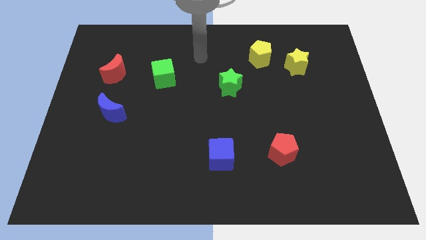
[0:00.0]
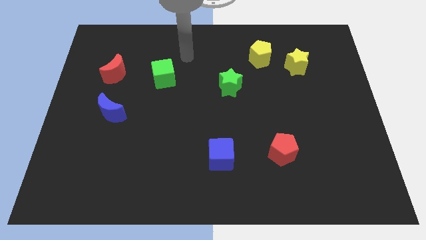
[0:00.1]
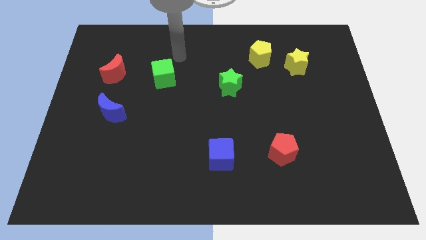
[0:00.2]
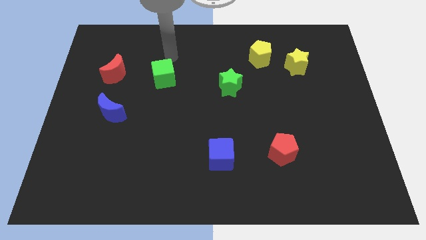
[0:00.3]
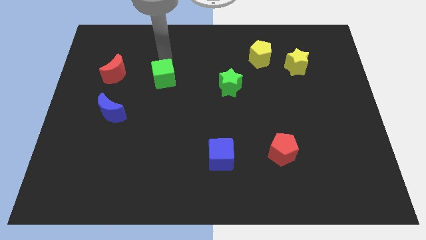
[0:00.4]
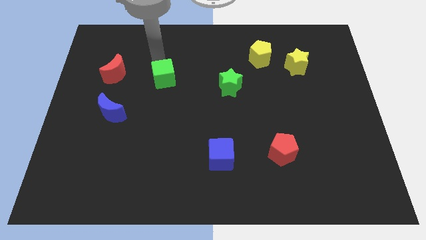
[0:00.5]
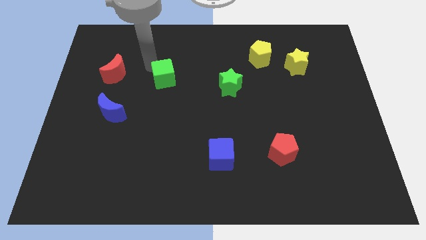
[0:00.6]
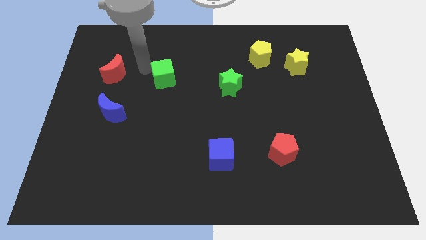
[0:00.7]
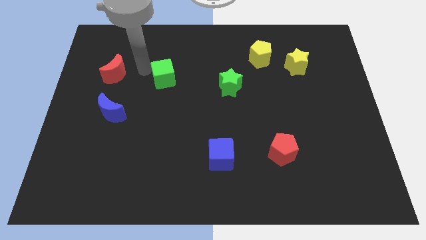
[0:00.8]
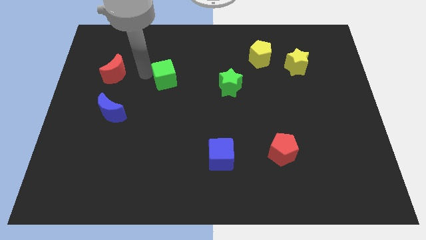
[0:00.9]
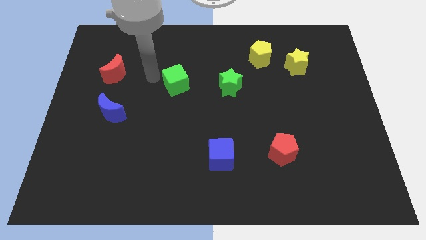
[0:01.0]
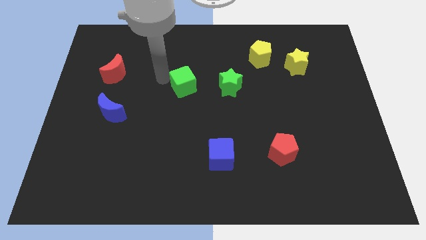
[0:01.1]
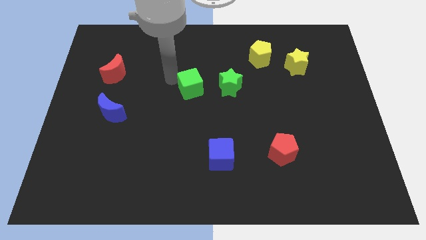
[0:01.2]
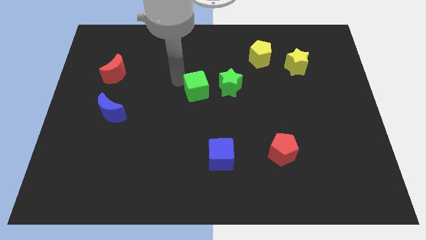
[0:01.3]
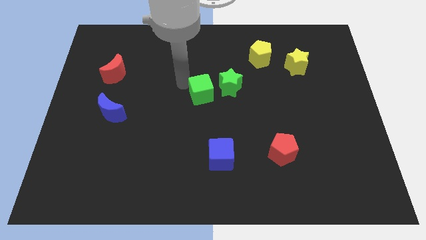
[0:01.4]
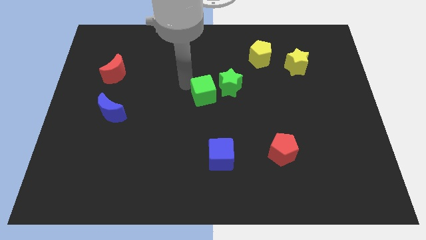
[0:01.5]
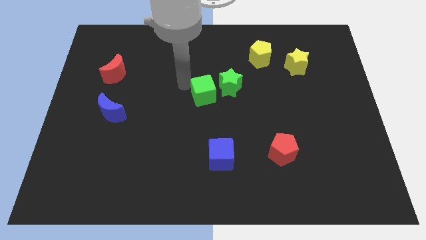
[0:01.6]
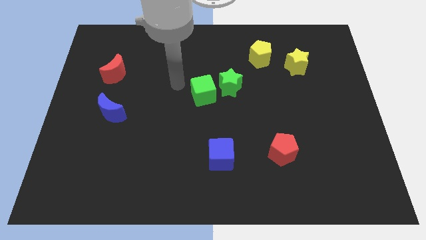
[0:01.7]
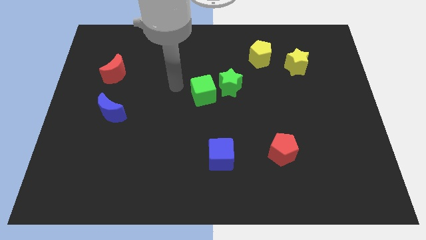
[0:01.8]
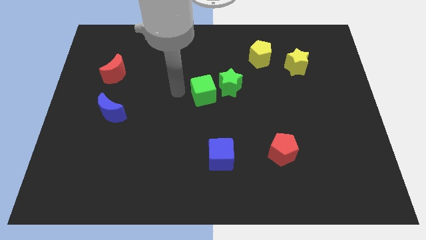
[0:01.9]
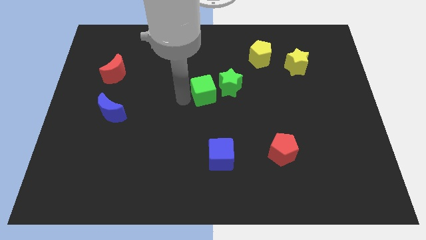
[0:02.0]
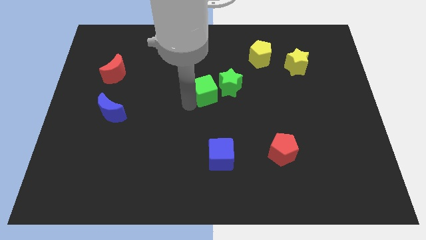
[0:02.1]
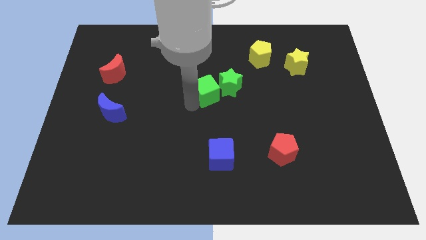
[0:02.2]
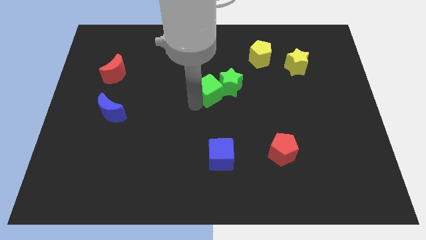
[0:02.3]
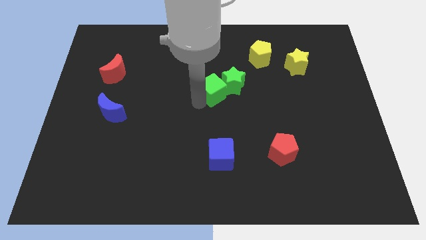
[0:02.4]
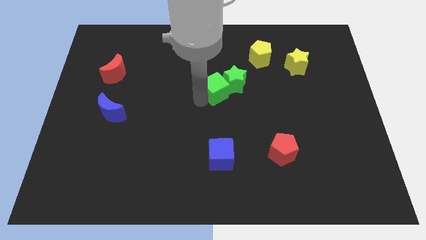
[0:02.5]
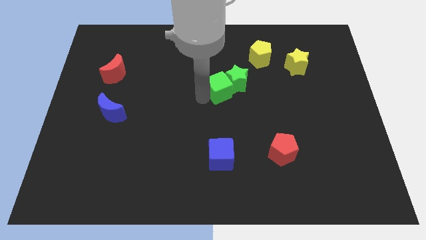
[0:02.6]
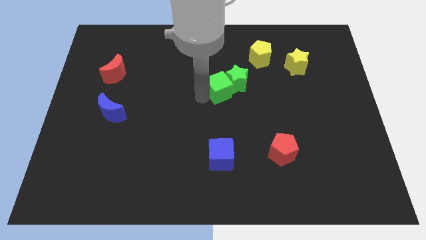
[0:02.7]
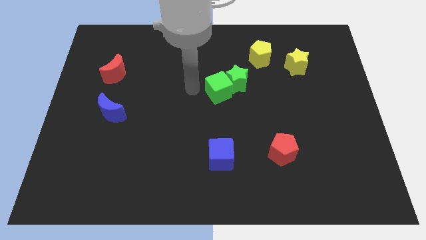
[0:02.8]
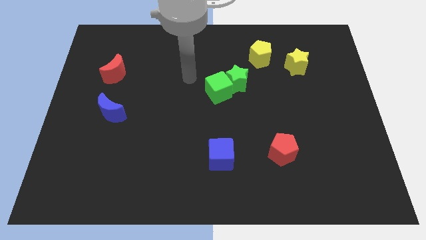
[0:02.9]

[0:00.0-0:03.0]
push the green cube into the green star

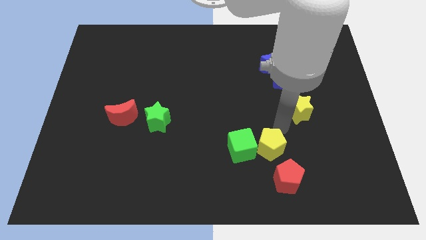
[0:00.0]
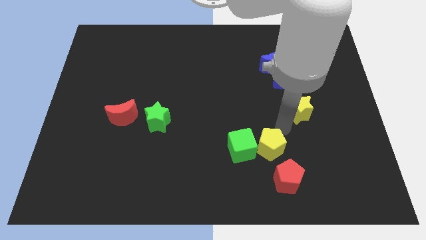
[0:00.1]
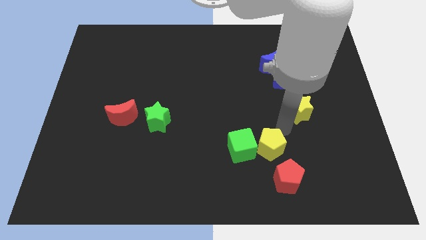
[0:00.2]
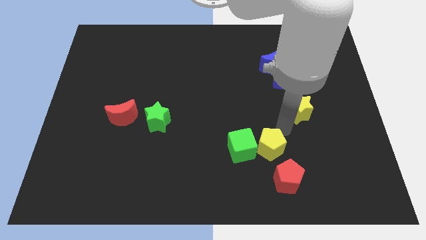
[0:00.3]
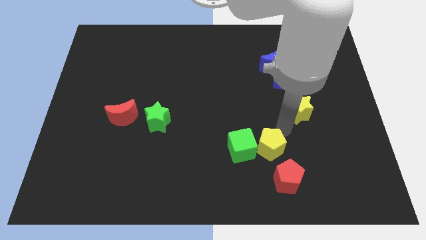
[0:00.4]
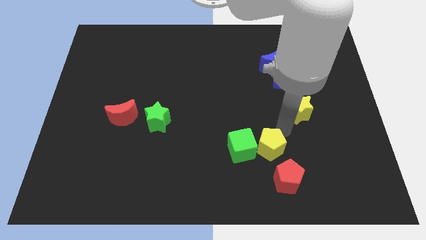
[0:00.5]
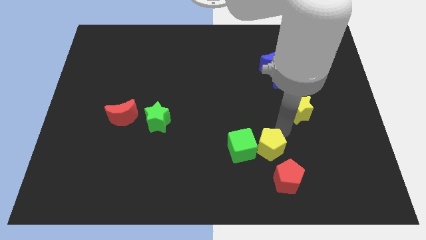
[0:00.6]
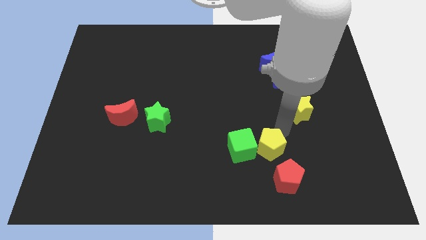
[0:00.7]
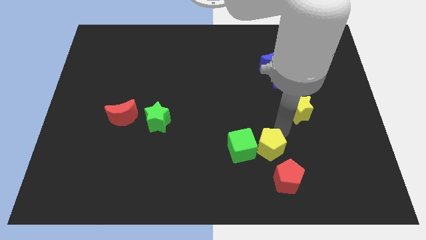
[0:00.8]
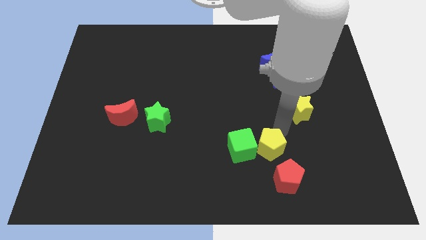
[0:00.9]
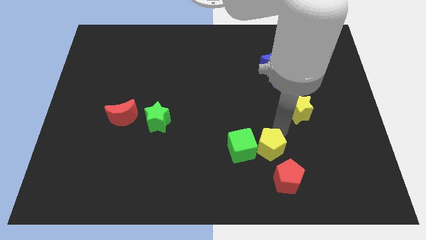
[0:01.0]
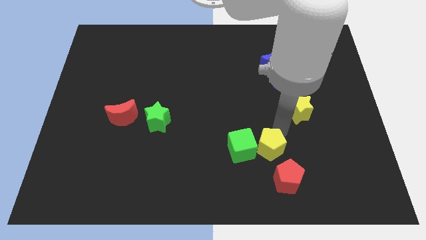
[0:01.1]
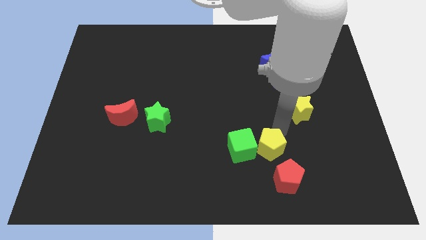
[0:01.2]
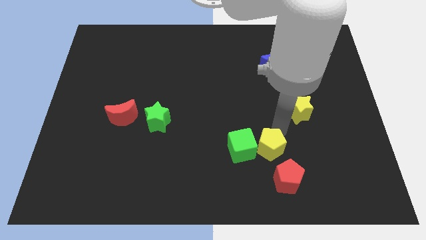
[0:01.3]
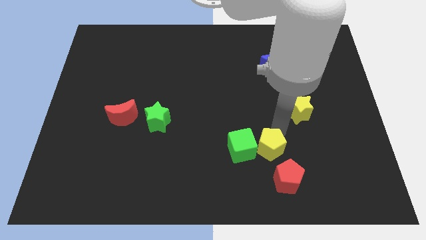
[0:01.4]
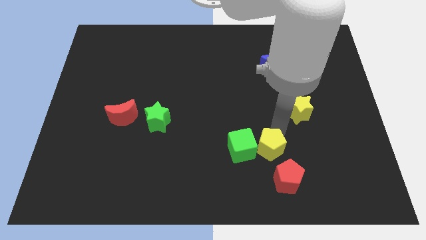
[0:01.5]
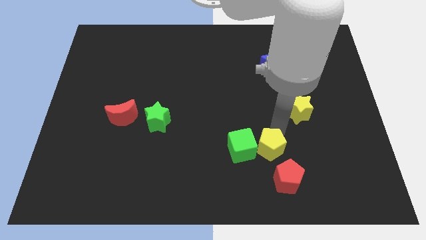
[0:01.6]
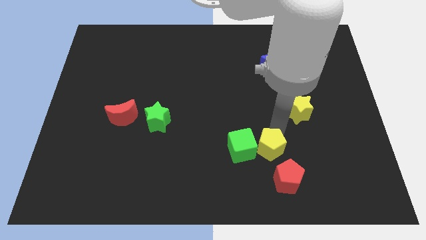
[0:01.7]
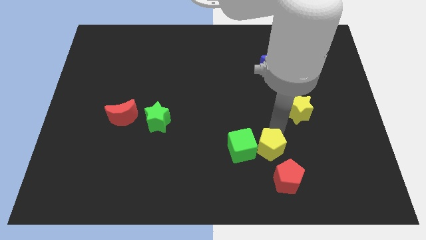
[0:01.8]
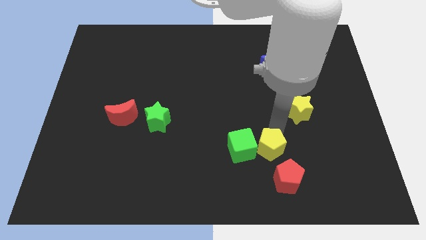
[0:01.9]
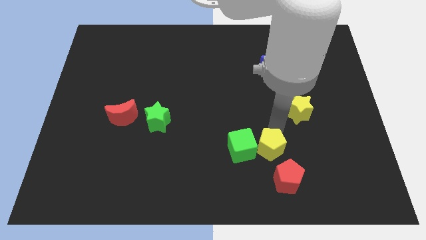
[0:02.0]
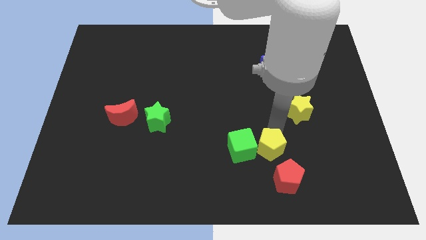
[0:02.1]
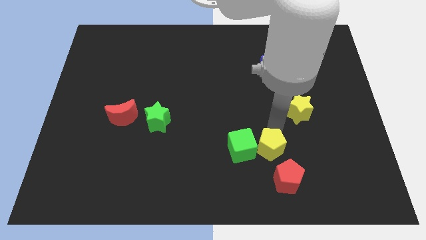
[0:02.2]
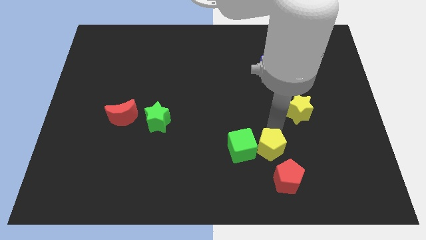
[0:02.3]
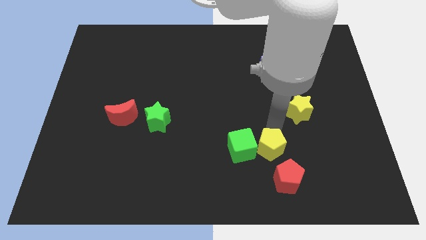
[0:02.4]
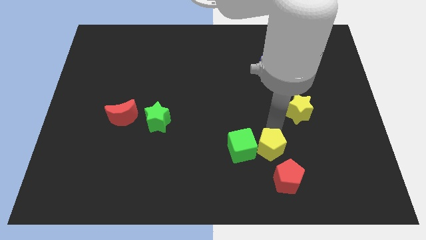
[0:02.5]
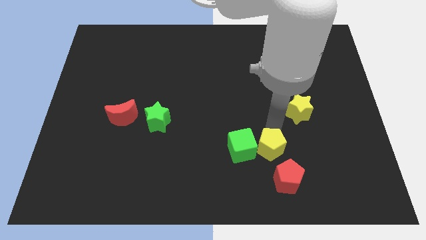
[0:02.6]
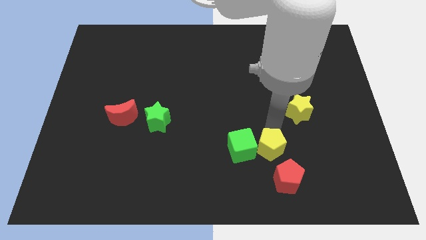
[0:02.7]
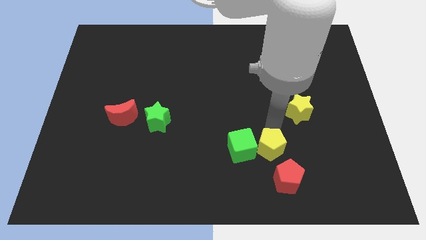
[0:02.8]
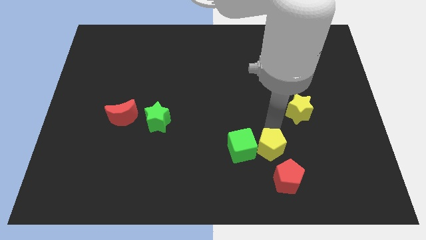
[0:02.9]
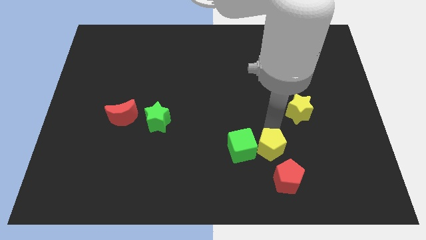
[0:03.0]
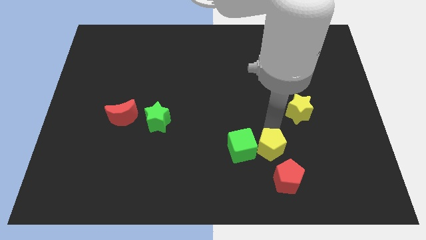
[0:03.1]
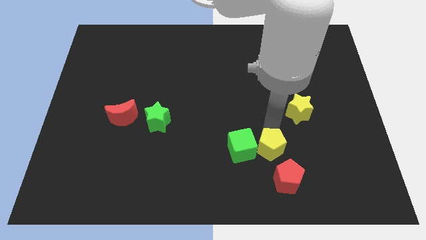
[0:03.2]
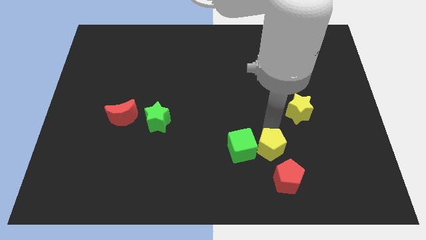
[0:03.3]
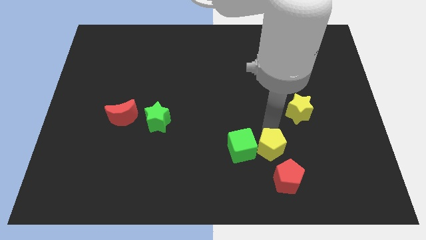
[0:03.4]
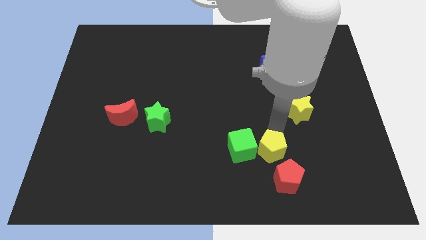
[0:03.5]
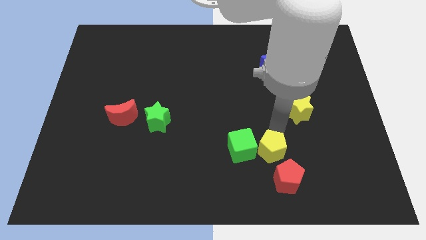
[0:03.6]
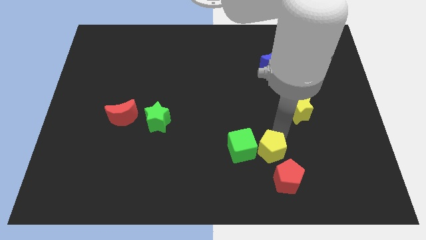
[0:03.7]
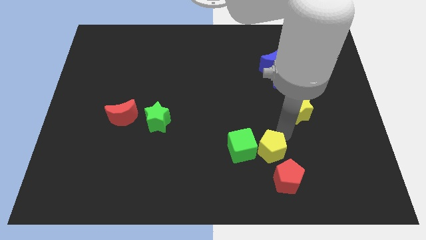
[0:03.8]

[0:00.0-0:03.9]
tap the yellow pentagon

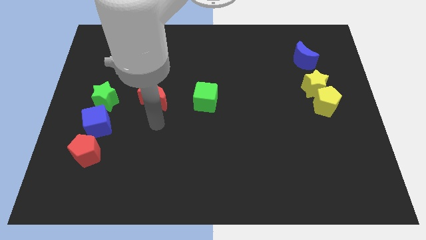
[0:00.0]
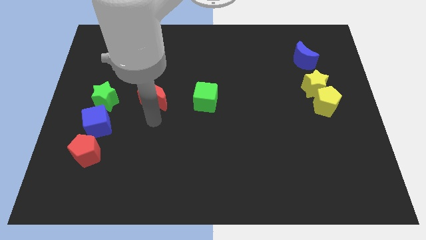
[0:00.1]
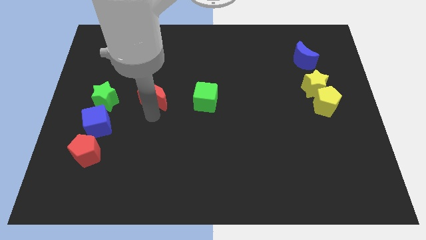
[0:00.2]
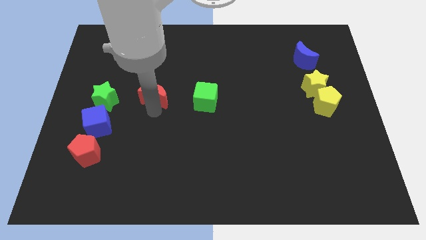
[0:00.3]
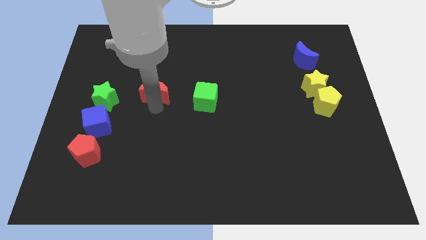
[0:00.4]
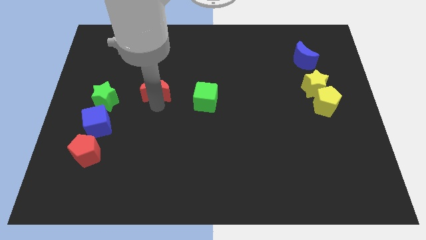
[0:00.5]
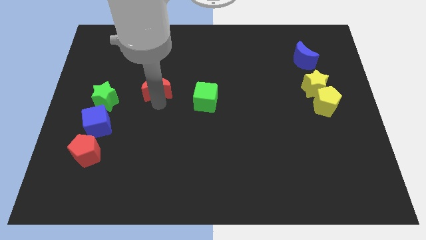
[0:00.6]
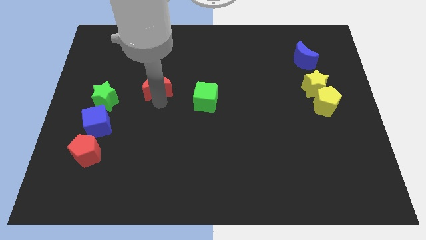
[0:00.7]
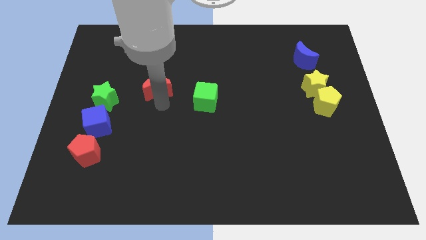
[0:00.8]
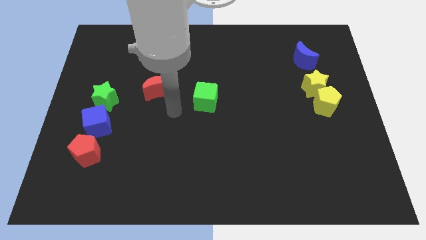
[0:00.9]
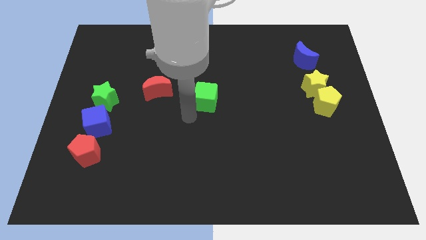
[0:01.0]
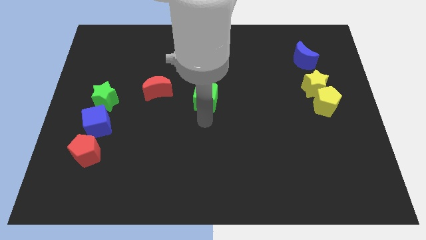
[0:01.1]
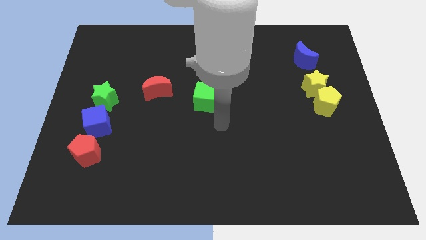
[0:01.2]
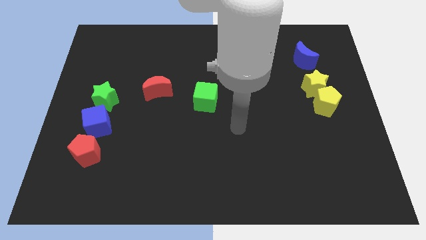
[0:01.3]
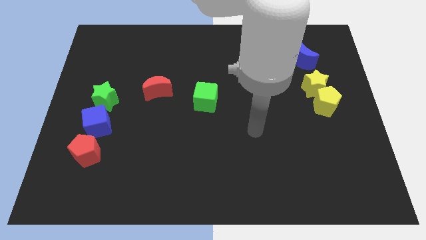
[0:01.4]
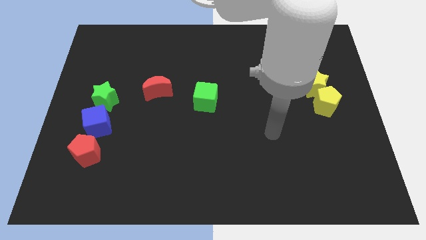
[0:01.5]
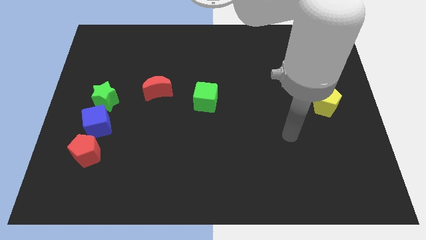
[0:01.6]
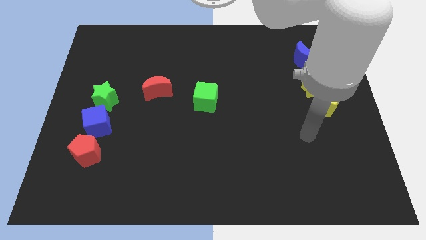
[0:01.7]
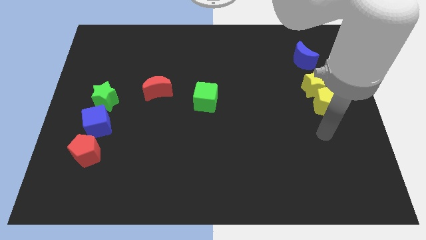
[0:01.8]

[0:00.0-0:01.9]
push red moon slightly up
